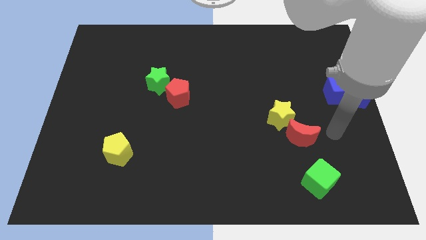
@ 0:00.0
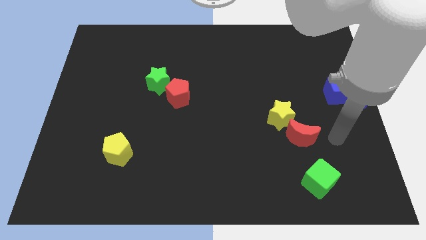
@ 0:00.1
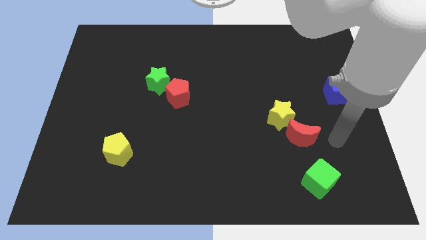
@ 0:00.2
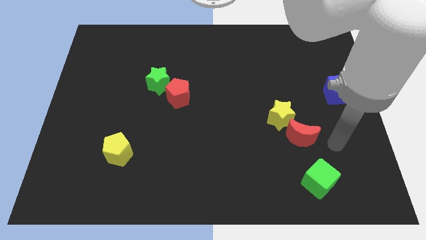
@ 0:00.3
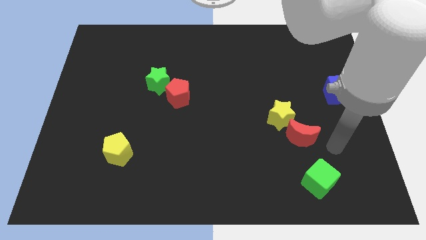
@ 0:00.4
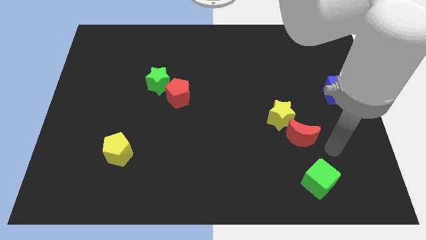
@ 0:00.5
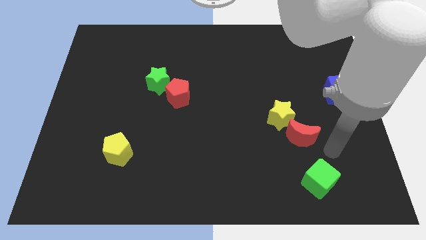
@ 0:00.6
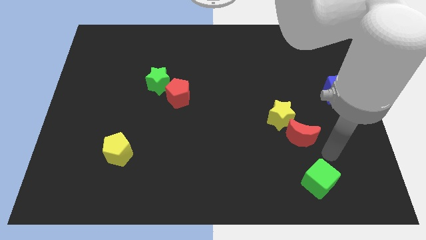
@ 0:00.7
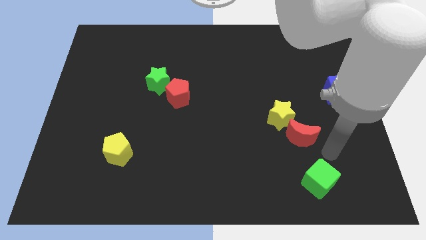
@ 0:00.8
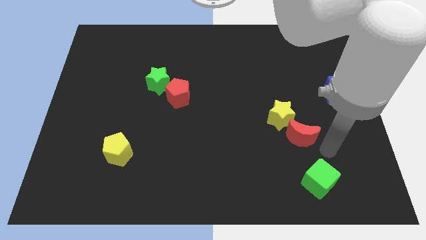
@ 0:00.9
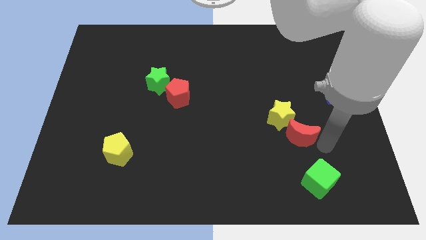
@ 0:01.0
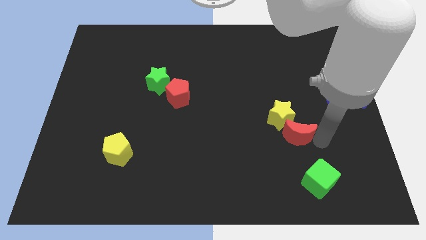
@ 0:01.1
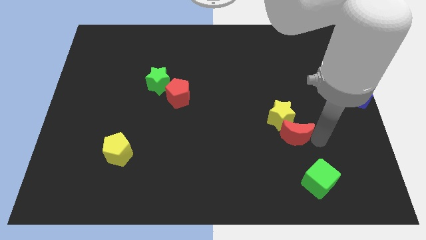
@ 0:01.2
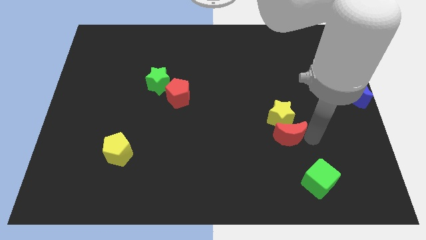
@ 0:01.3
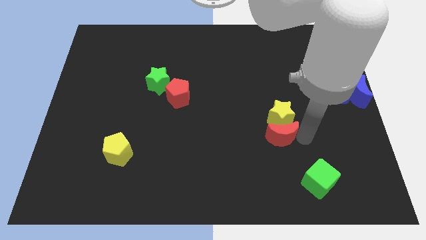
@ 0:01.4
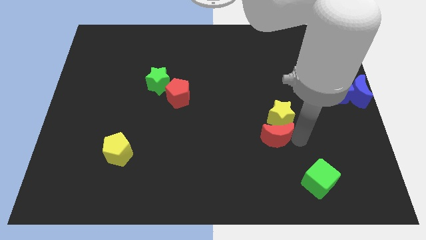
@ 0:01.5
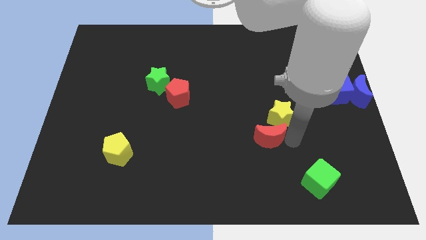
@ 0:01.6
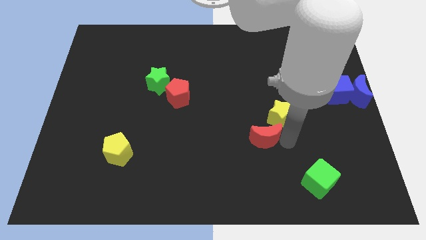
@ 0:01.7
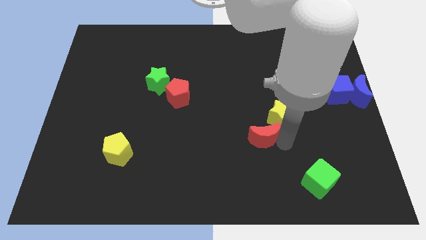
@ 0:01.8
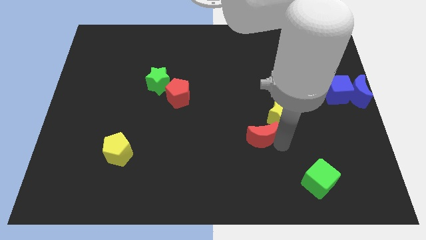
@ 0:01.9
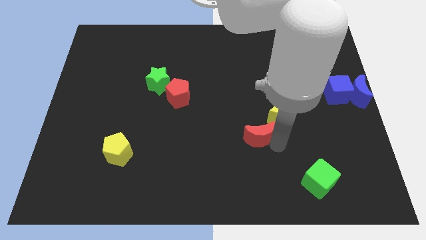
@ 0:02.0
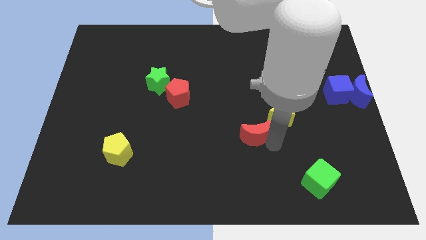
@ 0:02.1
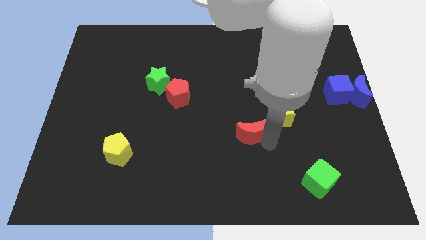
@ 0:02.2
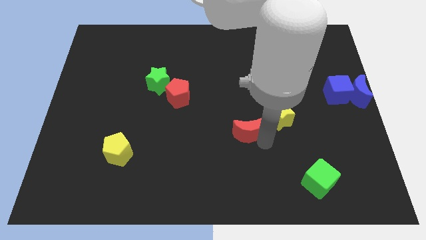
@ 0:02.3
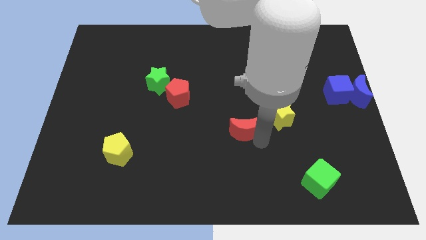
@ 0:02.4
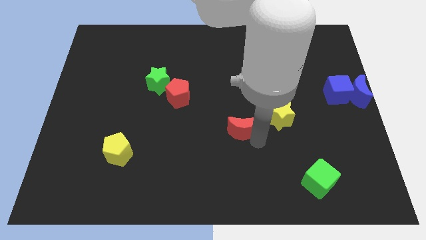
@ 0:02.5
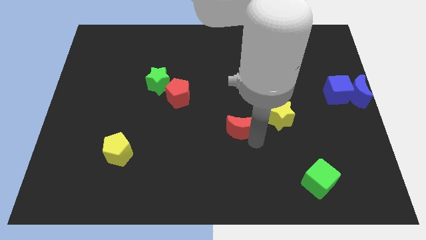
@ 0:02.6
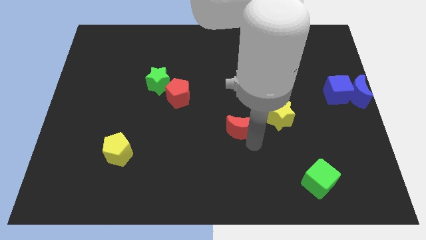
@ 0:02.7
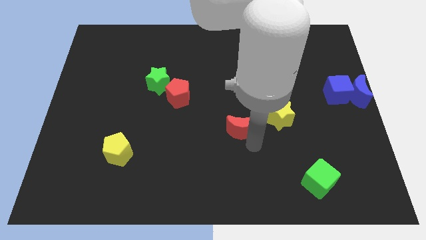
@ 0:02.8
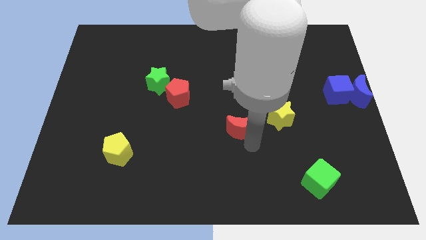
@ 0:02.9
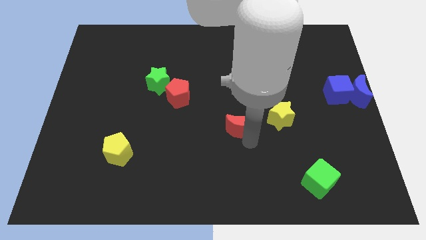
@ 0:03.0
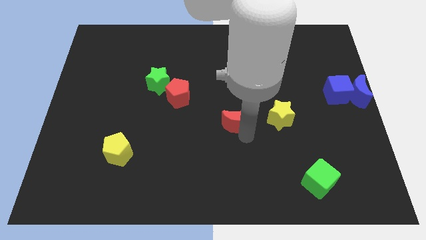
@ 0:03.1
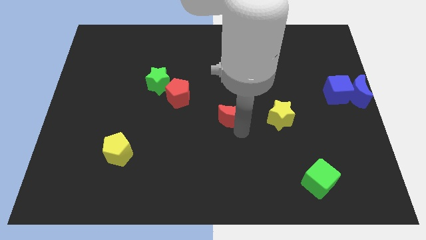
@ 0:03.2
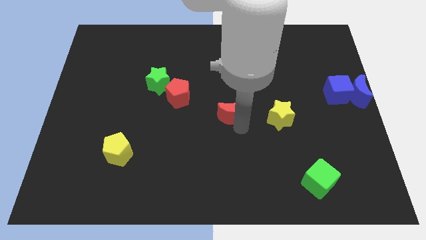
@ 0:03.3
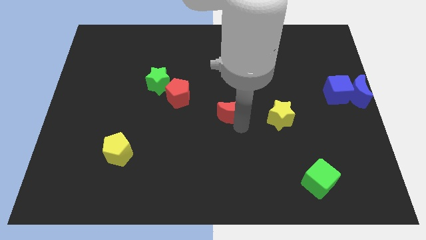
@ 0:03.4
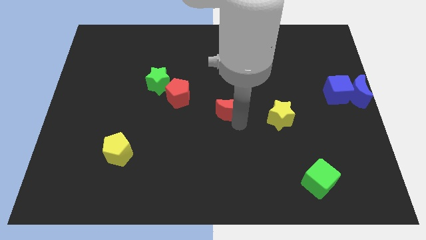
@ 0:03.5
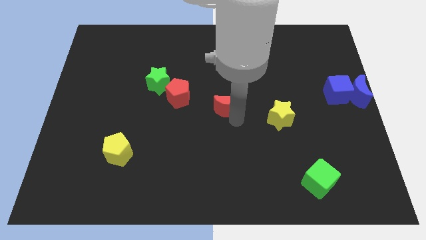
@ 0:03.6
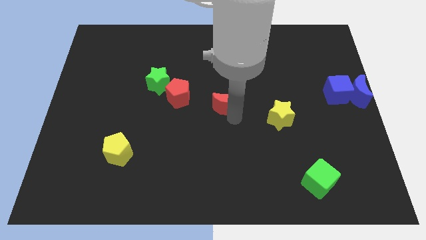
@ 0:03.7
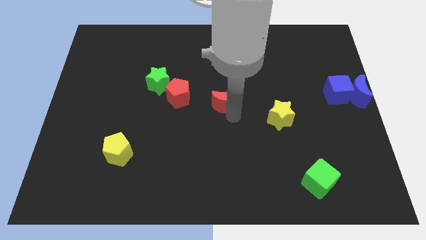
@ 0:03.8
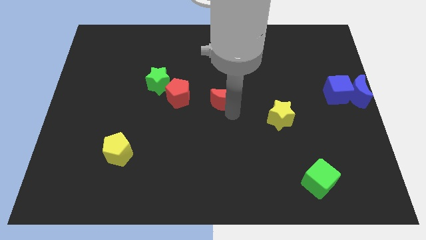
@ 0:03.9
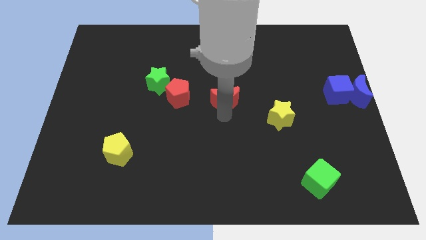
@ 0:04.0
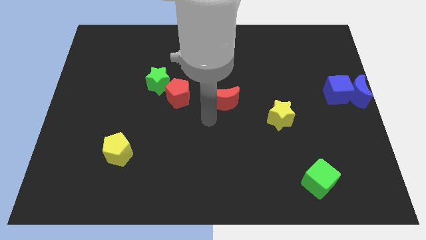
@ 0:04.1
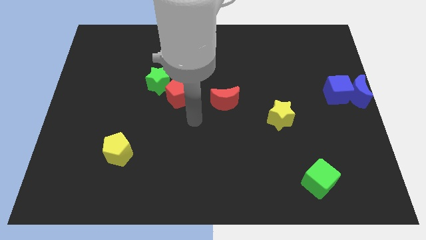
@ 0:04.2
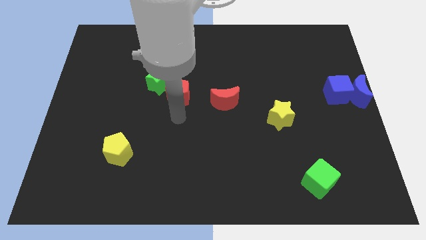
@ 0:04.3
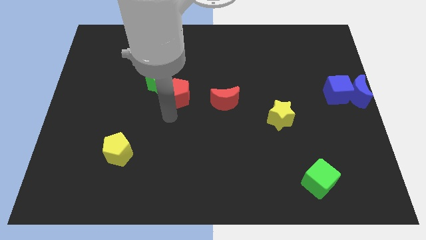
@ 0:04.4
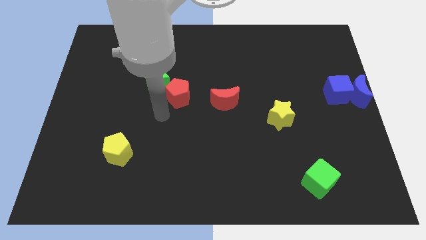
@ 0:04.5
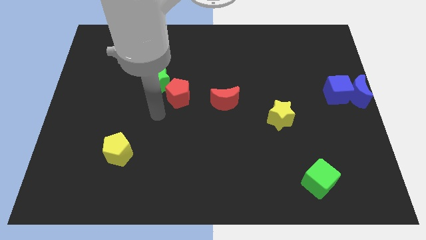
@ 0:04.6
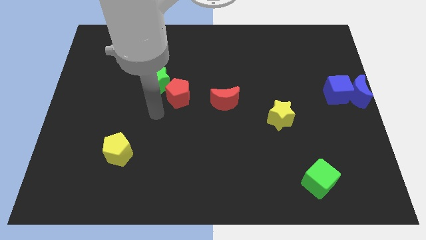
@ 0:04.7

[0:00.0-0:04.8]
move the red crescent to the right of the red pentagon

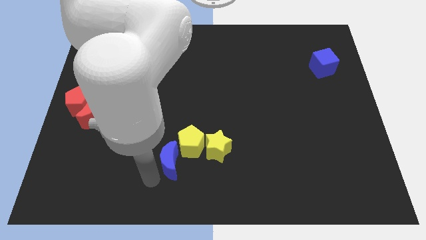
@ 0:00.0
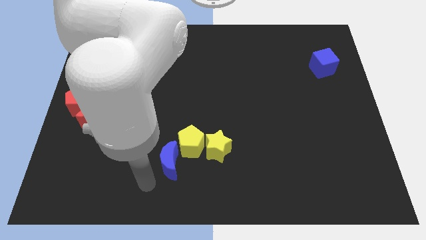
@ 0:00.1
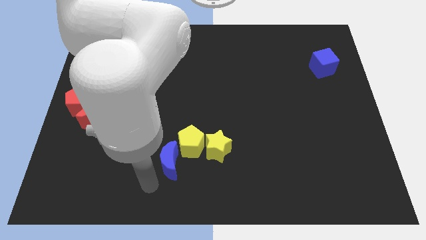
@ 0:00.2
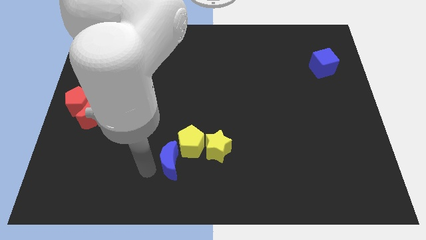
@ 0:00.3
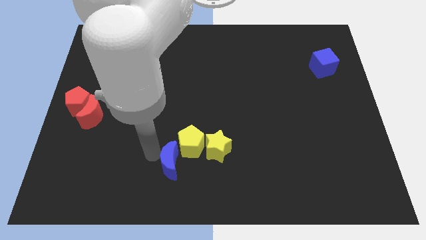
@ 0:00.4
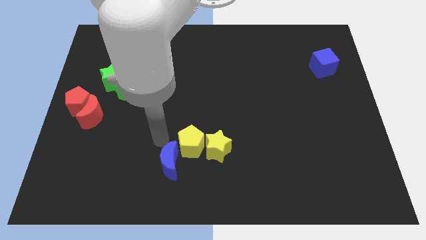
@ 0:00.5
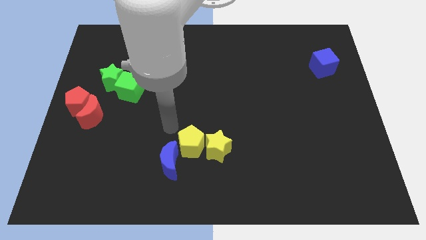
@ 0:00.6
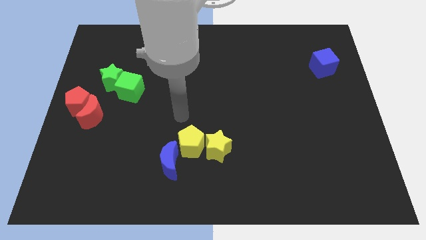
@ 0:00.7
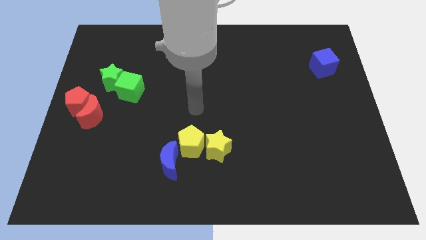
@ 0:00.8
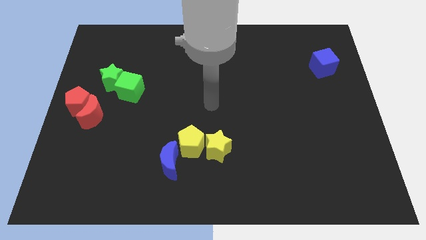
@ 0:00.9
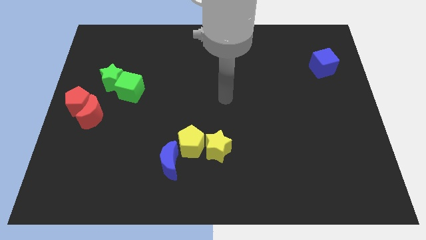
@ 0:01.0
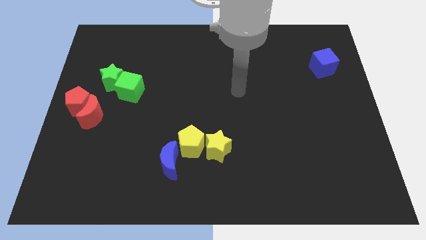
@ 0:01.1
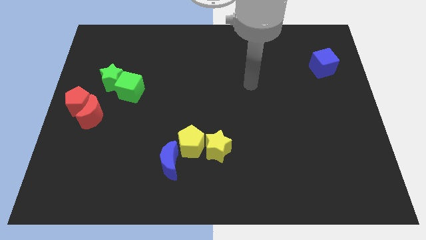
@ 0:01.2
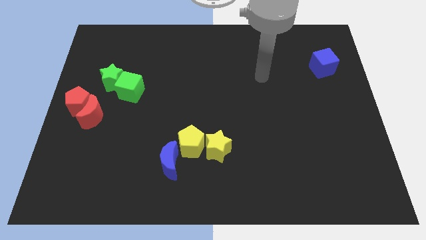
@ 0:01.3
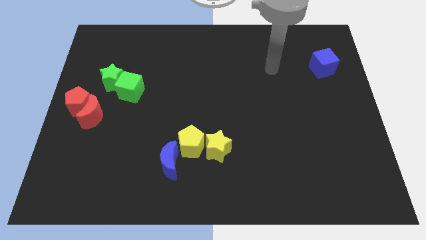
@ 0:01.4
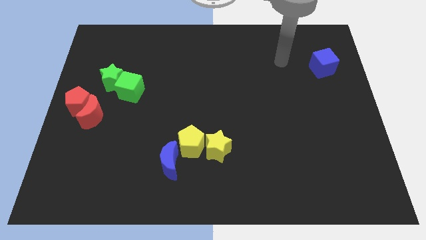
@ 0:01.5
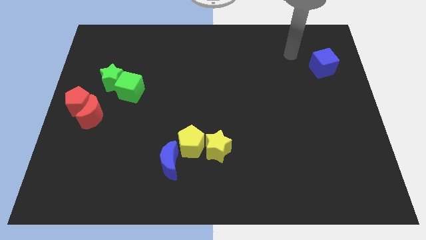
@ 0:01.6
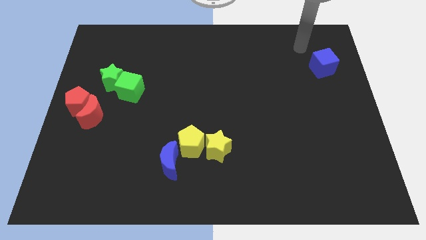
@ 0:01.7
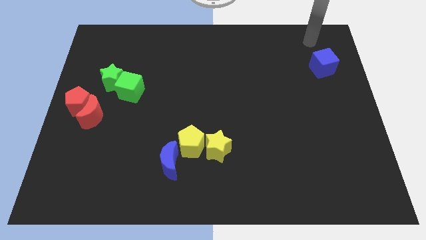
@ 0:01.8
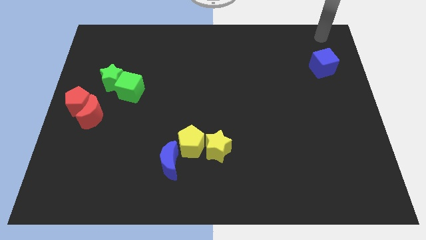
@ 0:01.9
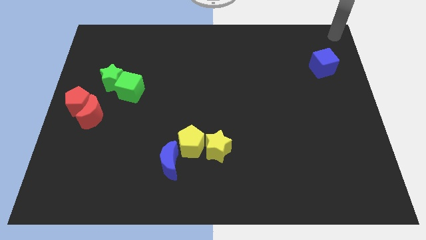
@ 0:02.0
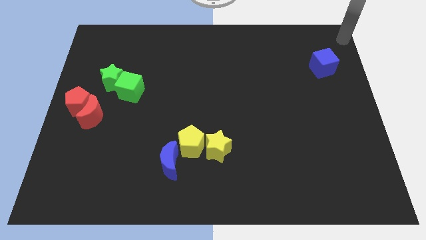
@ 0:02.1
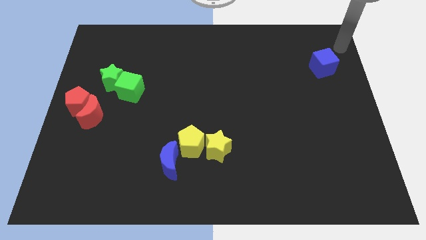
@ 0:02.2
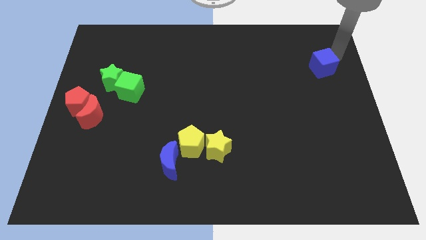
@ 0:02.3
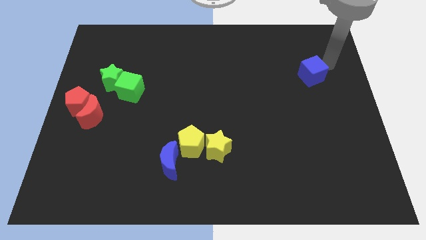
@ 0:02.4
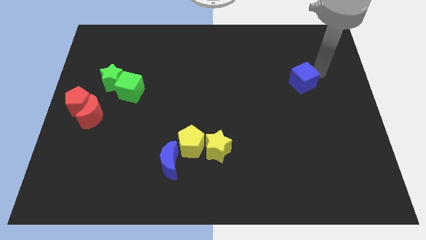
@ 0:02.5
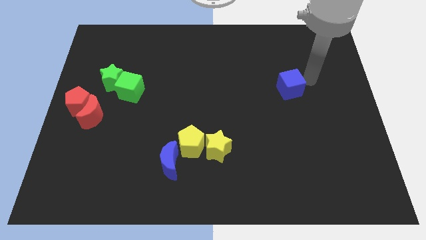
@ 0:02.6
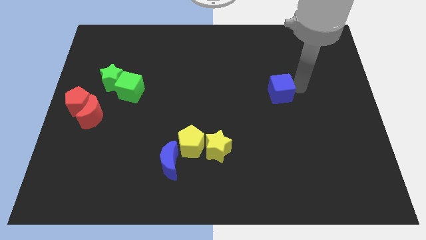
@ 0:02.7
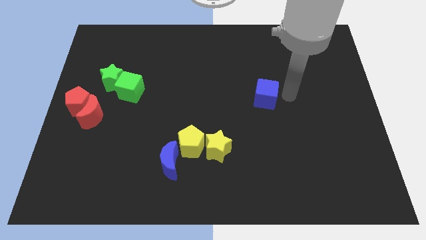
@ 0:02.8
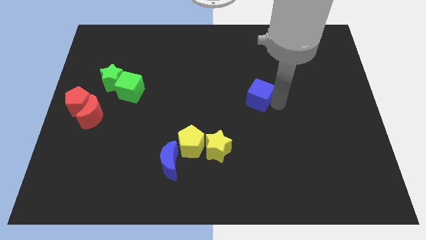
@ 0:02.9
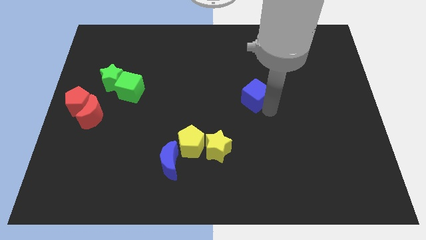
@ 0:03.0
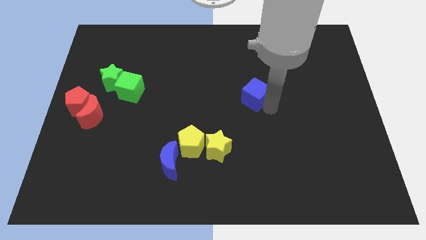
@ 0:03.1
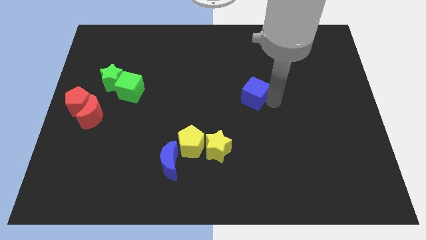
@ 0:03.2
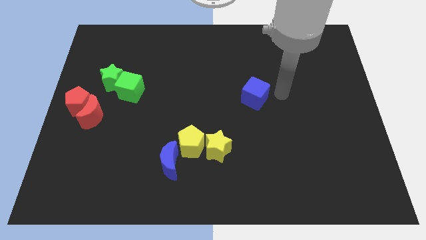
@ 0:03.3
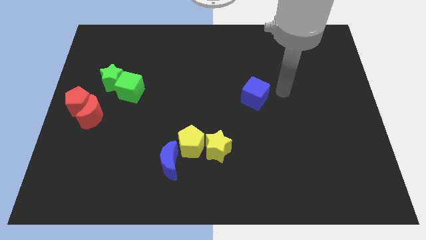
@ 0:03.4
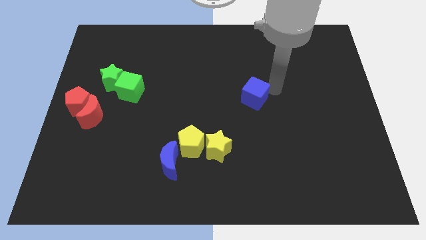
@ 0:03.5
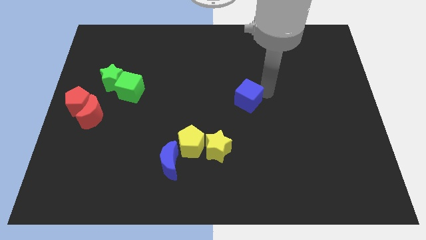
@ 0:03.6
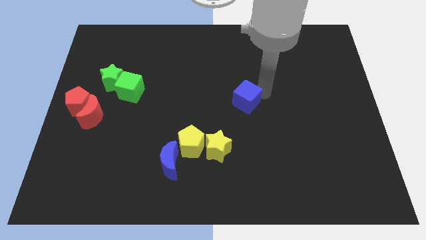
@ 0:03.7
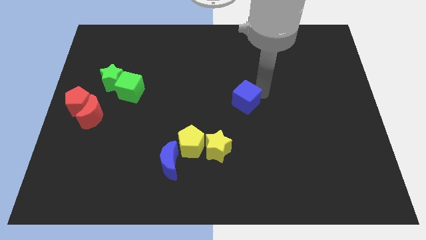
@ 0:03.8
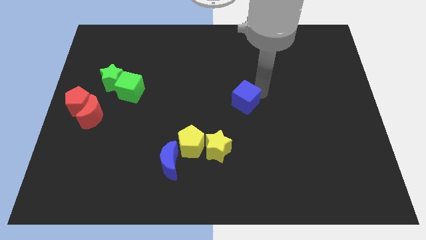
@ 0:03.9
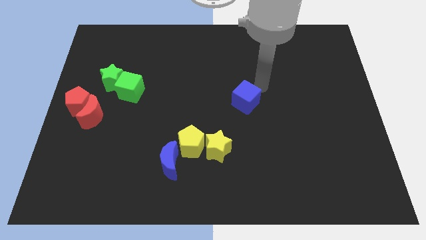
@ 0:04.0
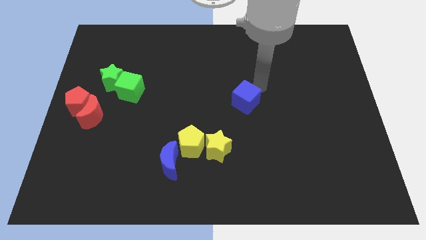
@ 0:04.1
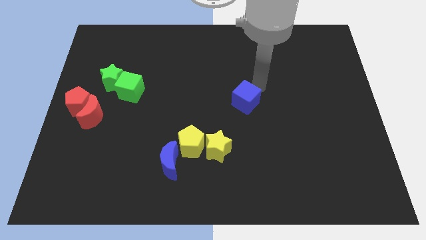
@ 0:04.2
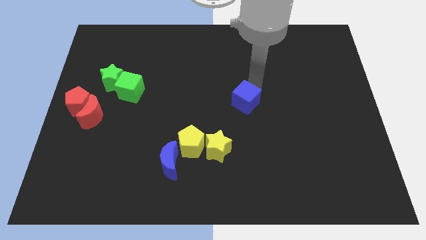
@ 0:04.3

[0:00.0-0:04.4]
push the blue cube towards the bottom side of the board
